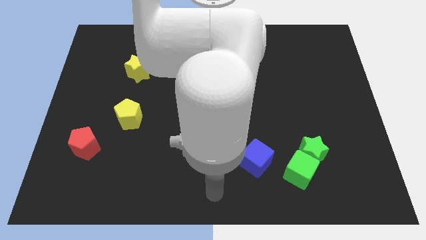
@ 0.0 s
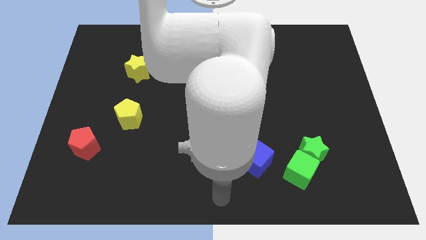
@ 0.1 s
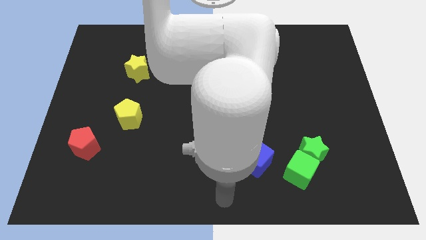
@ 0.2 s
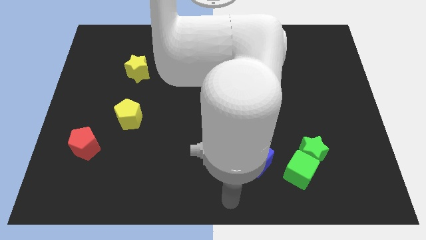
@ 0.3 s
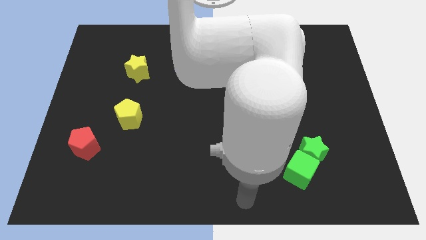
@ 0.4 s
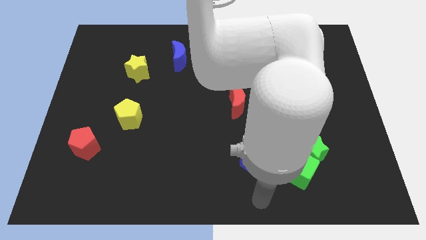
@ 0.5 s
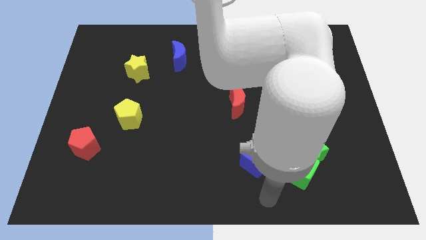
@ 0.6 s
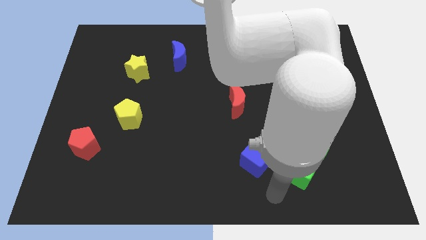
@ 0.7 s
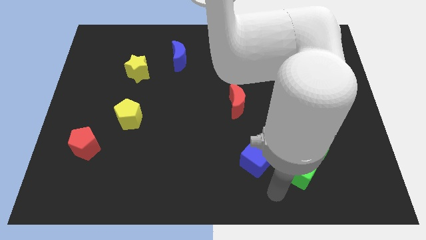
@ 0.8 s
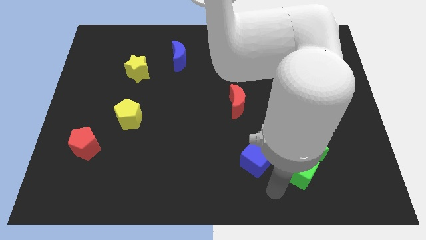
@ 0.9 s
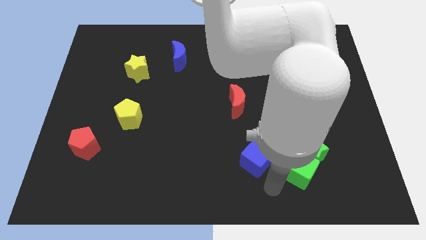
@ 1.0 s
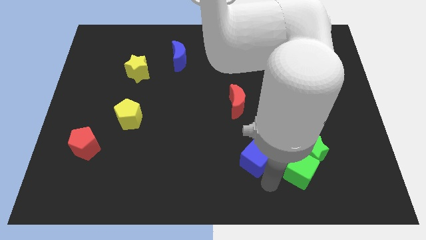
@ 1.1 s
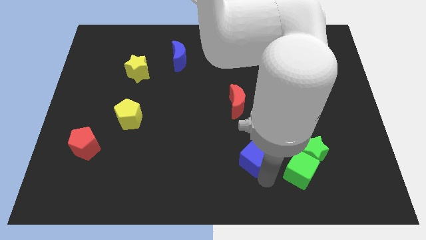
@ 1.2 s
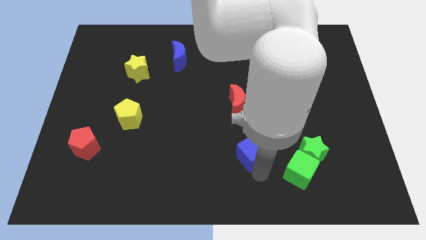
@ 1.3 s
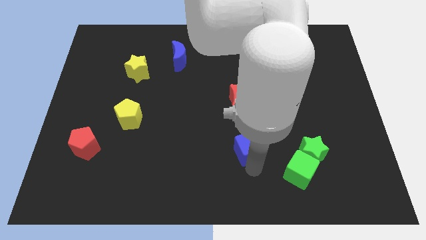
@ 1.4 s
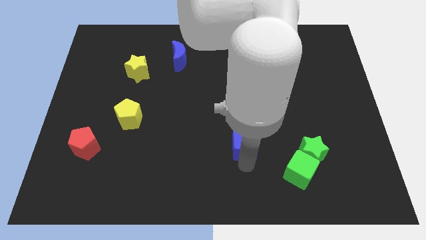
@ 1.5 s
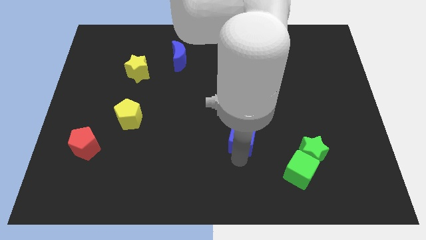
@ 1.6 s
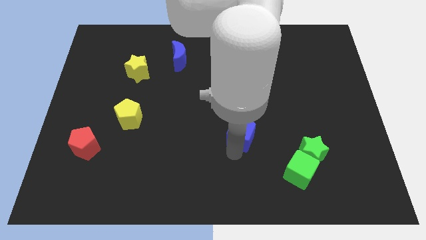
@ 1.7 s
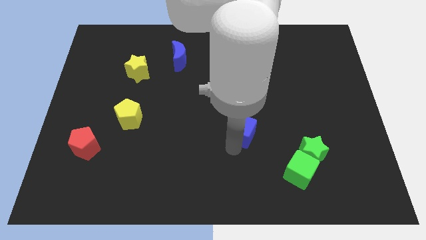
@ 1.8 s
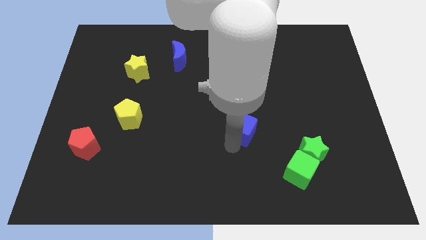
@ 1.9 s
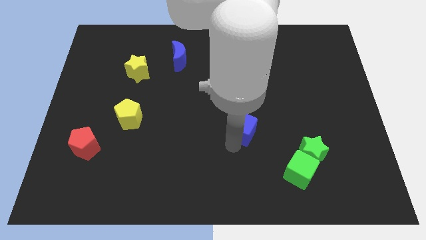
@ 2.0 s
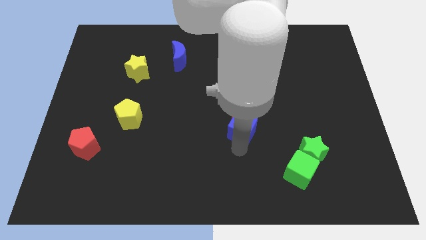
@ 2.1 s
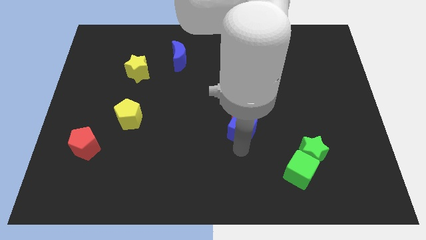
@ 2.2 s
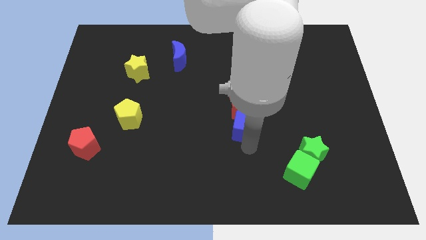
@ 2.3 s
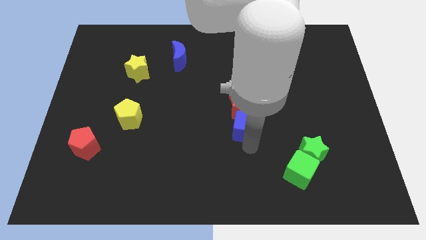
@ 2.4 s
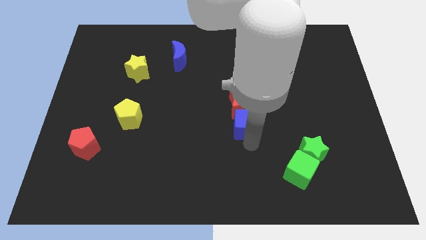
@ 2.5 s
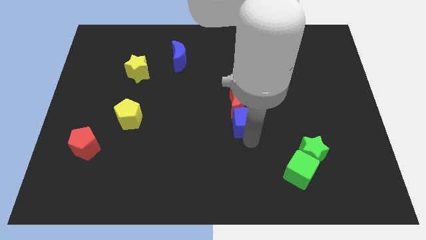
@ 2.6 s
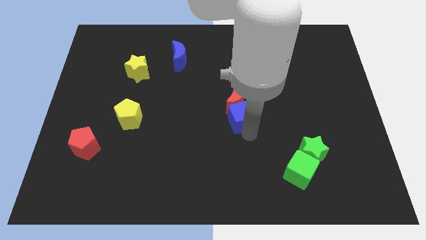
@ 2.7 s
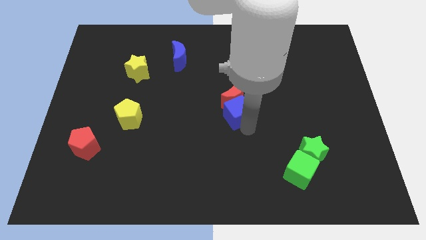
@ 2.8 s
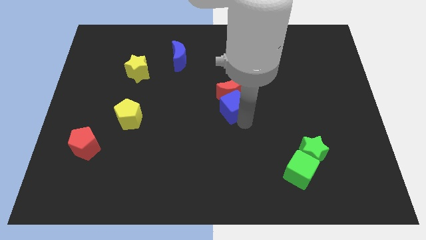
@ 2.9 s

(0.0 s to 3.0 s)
push the blue cube into the red moon

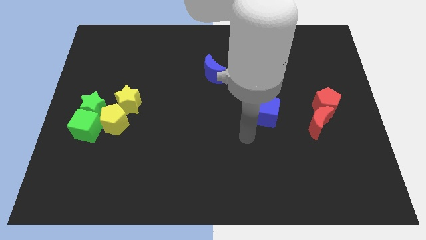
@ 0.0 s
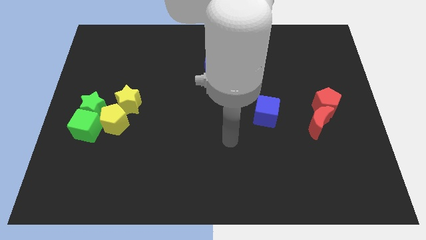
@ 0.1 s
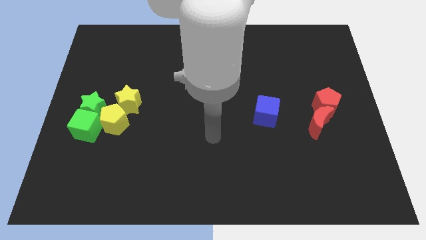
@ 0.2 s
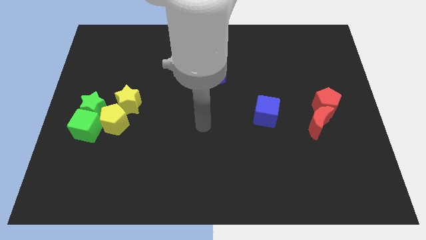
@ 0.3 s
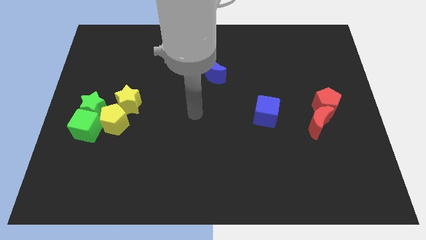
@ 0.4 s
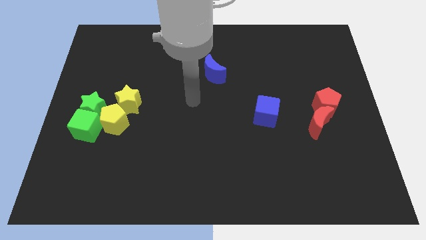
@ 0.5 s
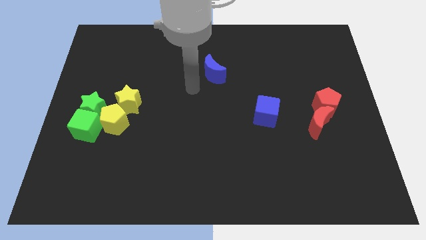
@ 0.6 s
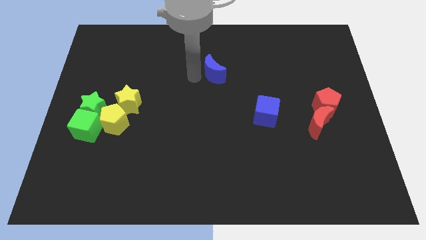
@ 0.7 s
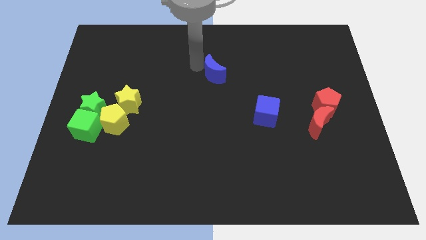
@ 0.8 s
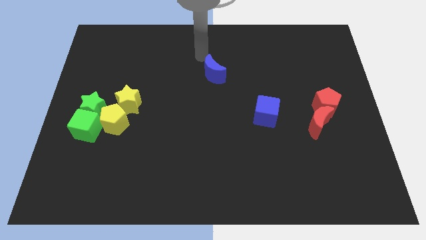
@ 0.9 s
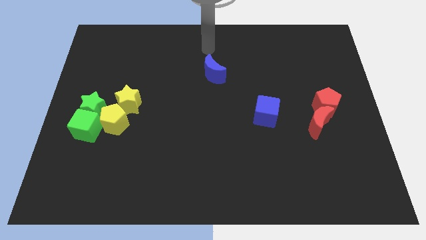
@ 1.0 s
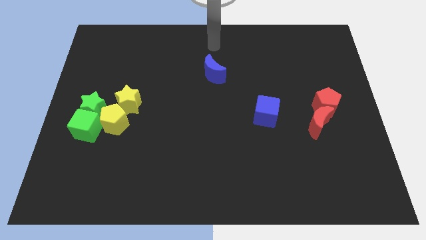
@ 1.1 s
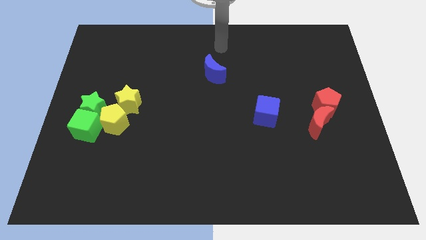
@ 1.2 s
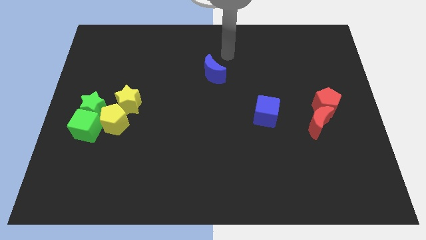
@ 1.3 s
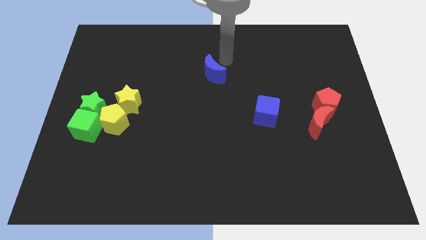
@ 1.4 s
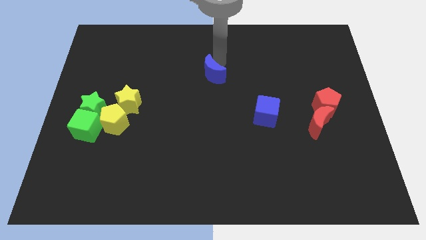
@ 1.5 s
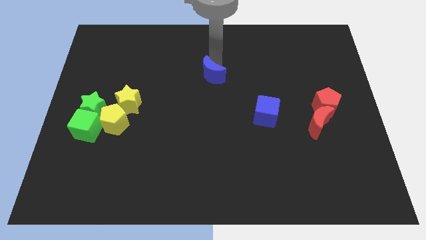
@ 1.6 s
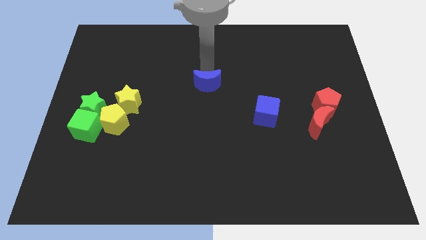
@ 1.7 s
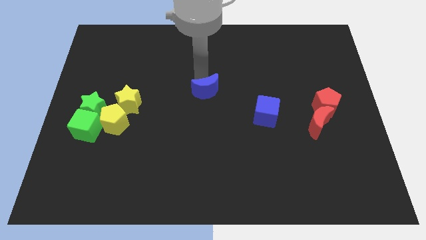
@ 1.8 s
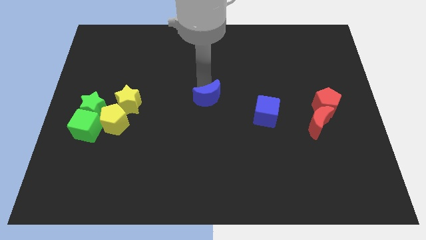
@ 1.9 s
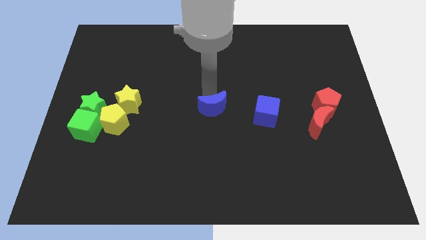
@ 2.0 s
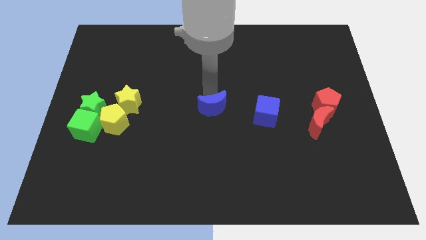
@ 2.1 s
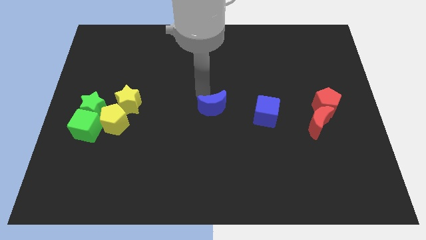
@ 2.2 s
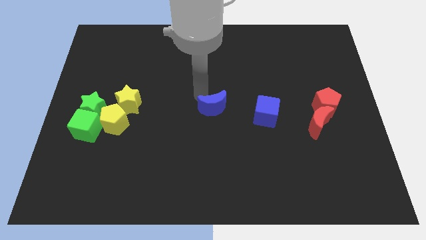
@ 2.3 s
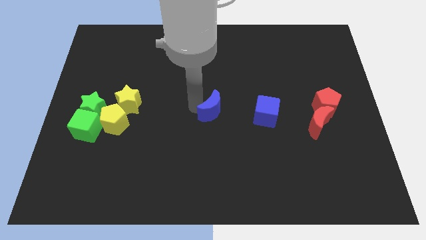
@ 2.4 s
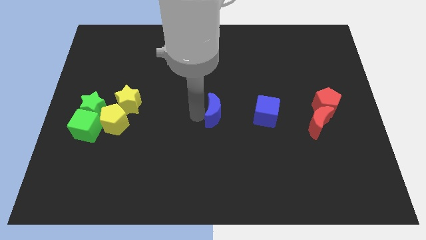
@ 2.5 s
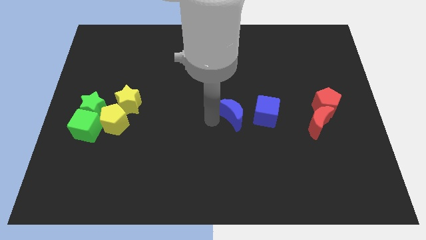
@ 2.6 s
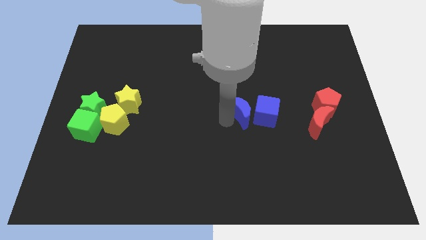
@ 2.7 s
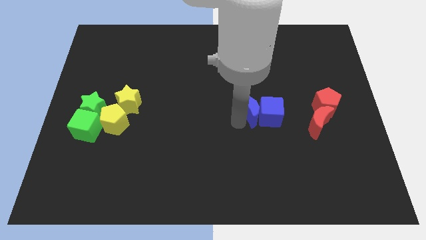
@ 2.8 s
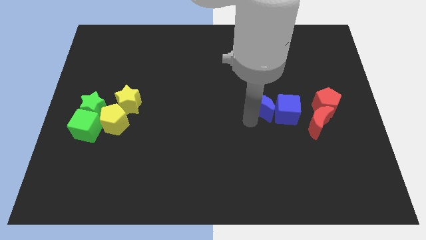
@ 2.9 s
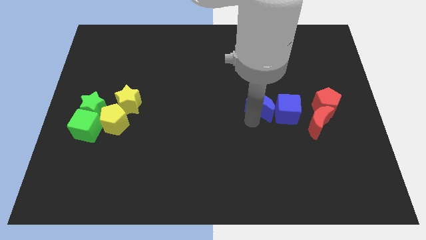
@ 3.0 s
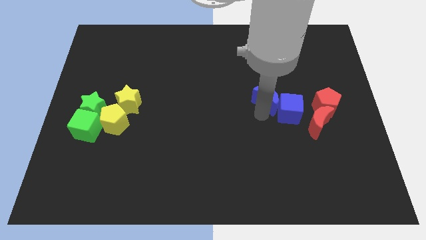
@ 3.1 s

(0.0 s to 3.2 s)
group up the blue blocks

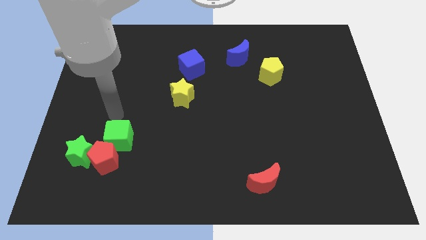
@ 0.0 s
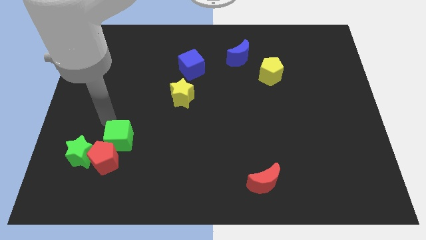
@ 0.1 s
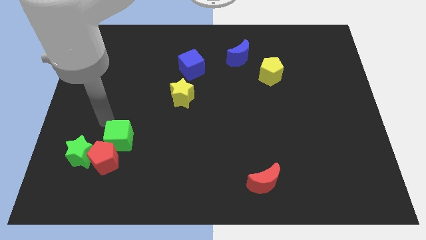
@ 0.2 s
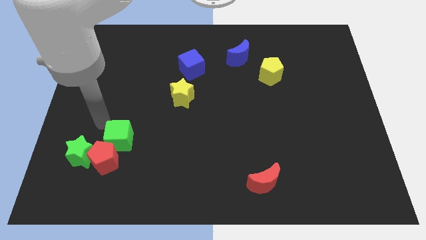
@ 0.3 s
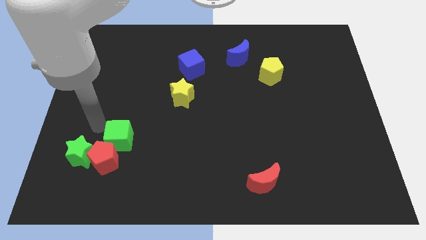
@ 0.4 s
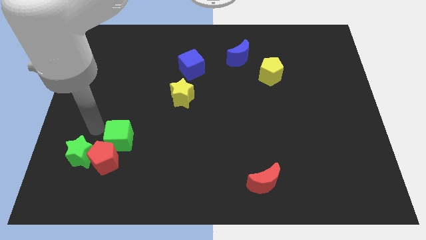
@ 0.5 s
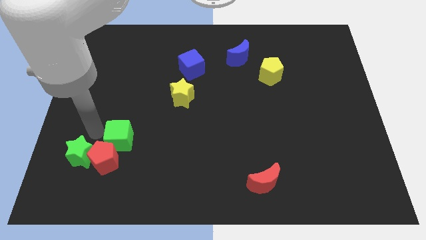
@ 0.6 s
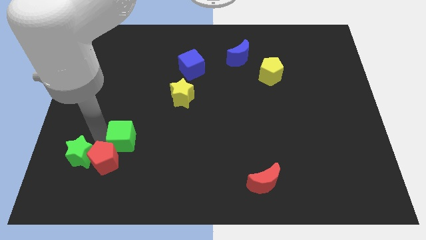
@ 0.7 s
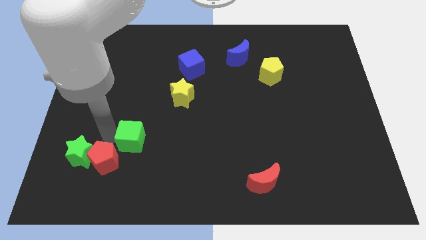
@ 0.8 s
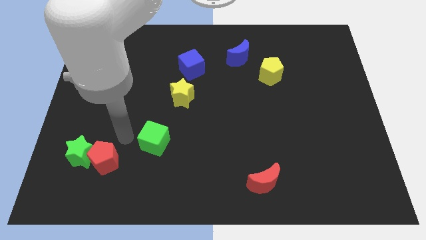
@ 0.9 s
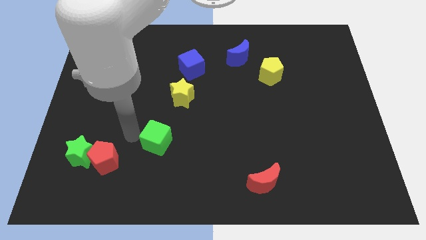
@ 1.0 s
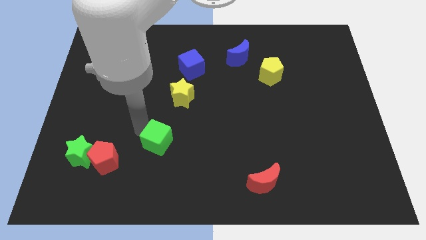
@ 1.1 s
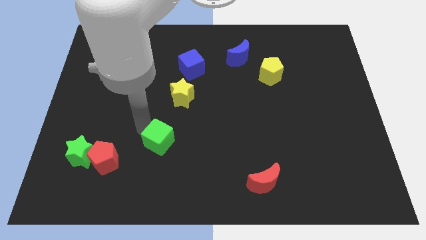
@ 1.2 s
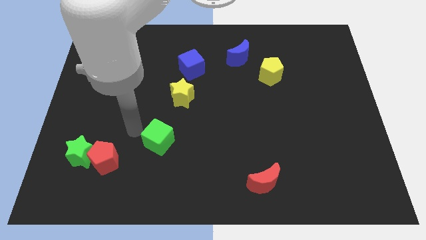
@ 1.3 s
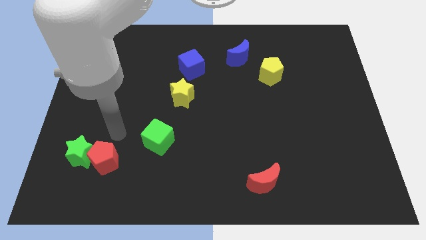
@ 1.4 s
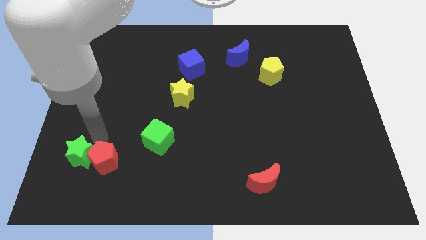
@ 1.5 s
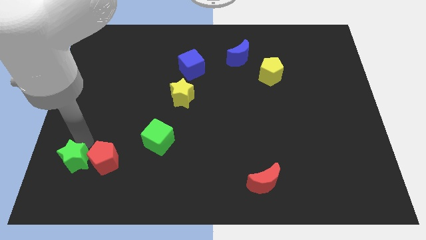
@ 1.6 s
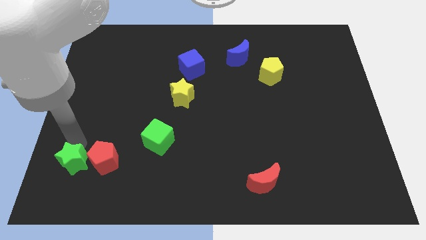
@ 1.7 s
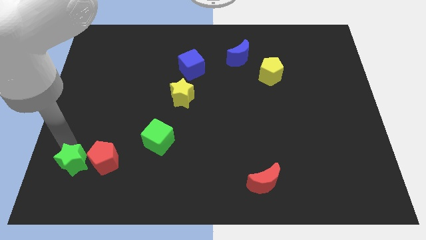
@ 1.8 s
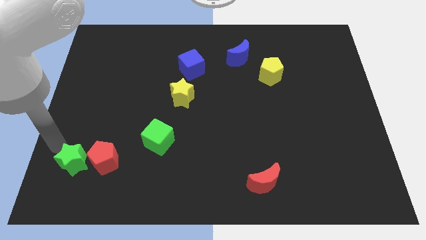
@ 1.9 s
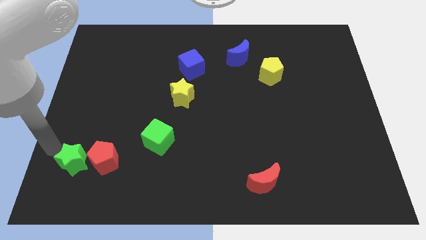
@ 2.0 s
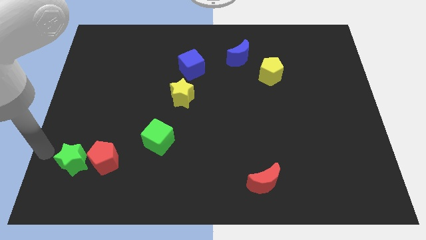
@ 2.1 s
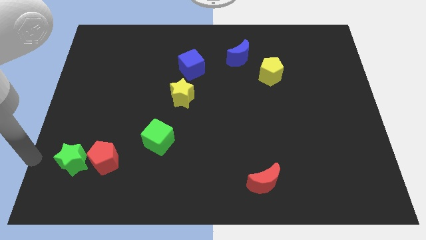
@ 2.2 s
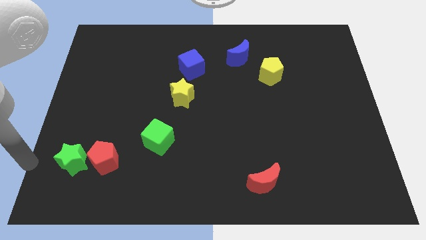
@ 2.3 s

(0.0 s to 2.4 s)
separate the green cube from the group of blocks

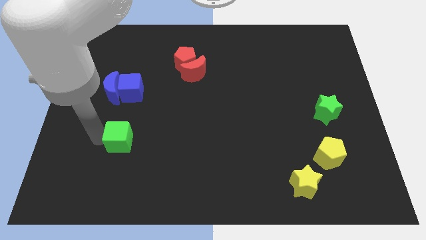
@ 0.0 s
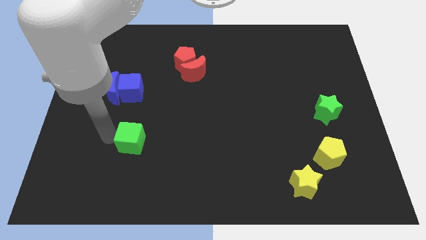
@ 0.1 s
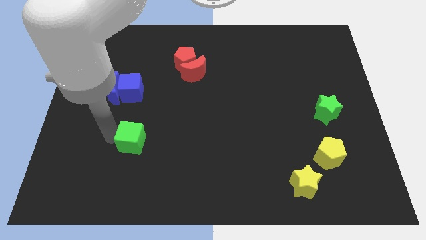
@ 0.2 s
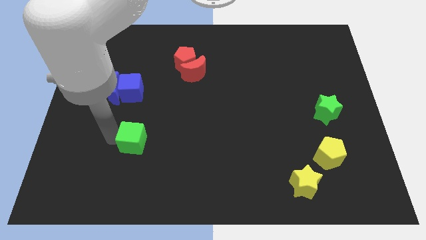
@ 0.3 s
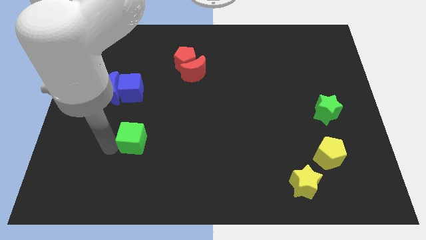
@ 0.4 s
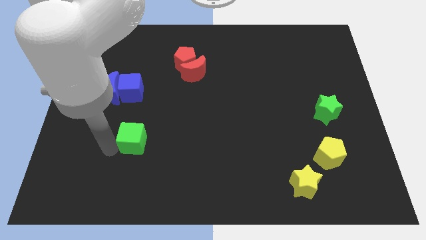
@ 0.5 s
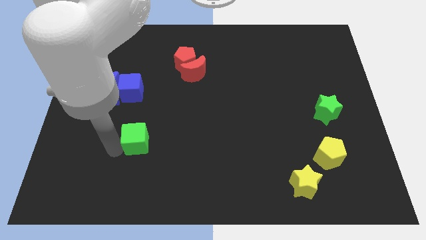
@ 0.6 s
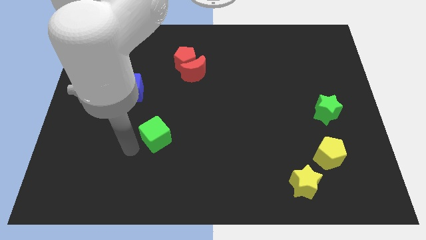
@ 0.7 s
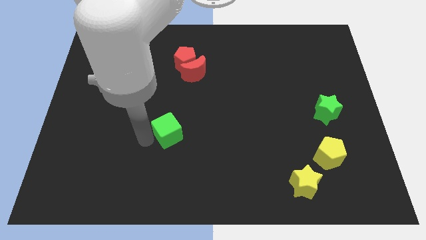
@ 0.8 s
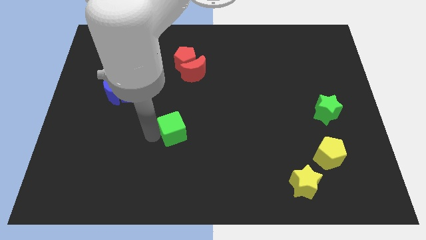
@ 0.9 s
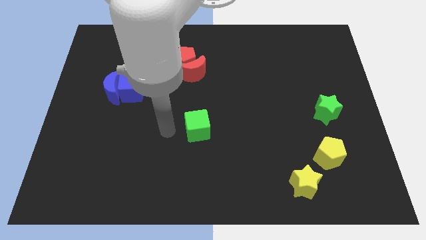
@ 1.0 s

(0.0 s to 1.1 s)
place the green cube below the red crescent
